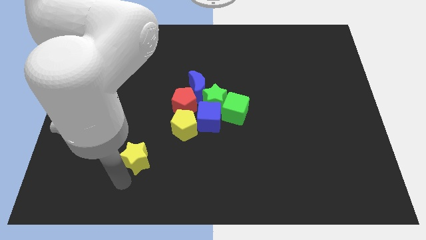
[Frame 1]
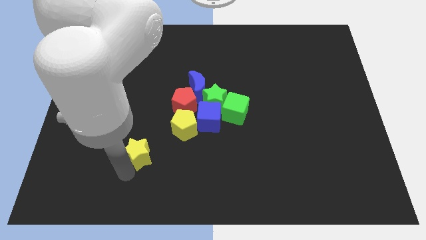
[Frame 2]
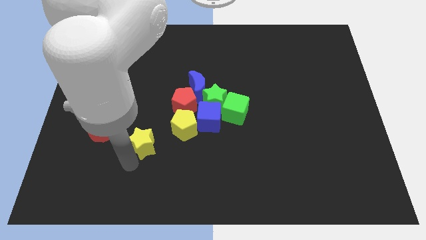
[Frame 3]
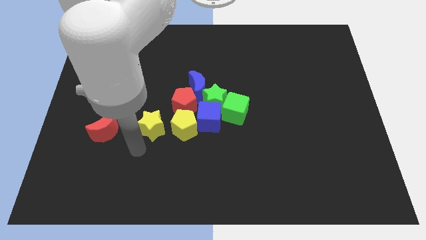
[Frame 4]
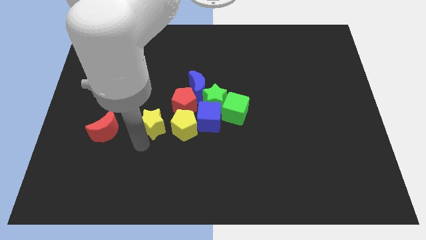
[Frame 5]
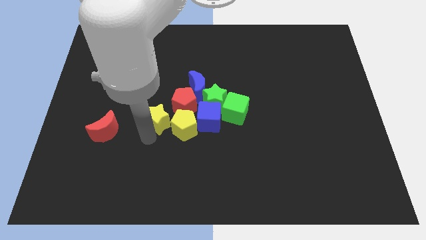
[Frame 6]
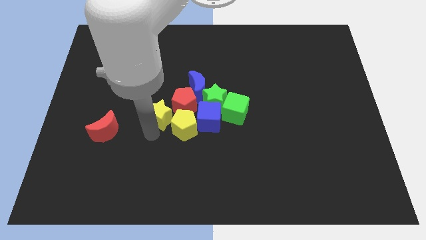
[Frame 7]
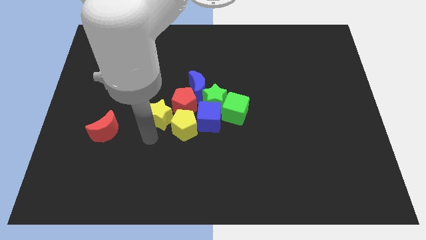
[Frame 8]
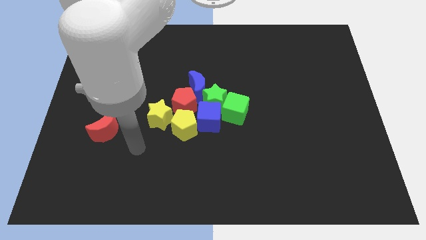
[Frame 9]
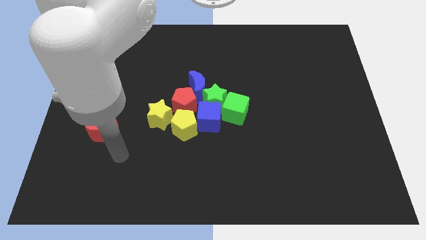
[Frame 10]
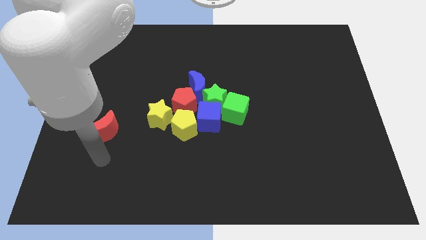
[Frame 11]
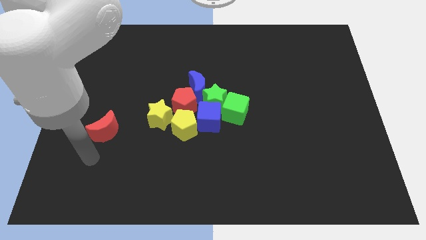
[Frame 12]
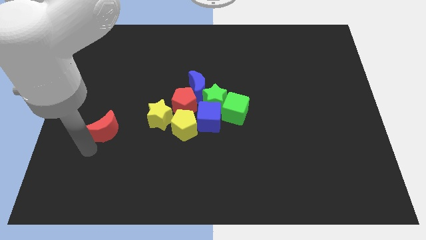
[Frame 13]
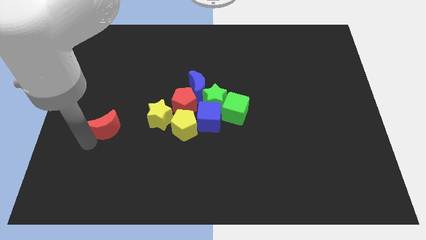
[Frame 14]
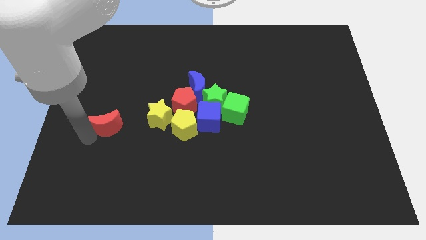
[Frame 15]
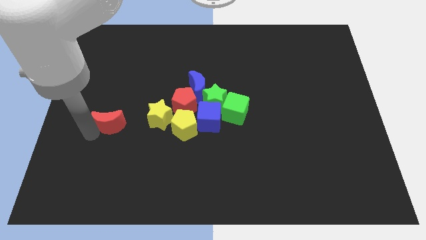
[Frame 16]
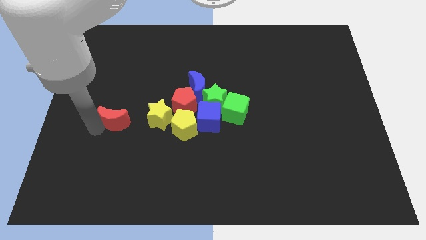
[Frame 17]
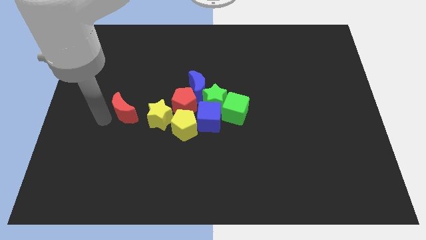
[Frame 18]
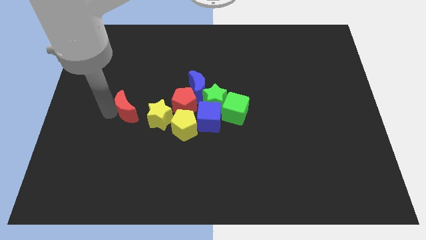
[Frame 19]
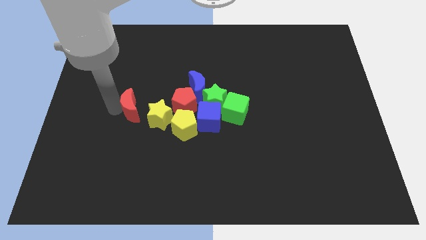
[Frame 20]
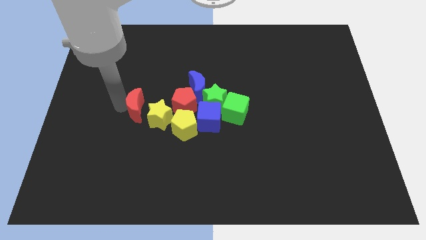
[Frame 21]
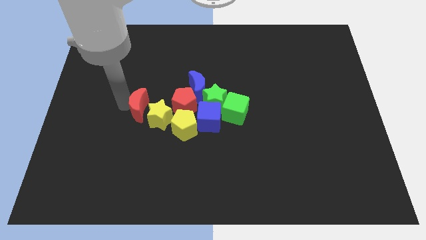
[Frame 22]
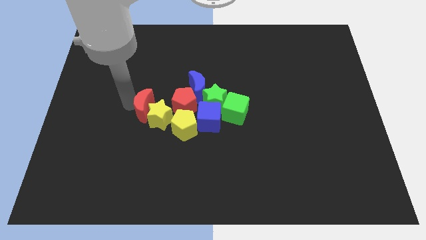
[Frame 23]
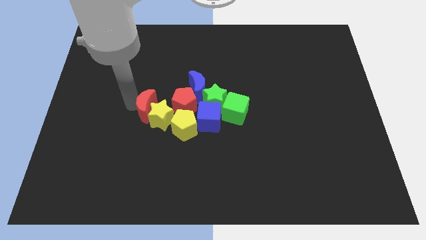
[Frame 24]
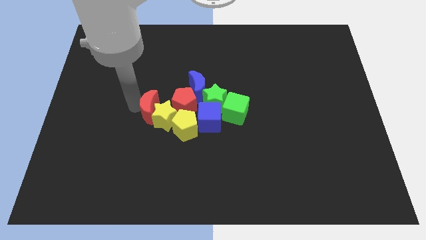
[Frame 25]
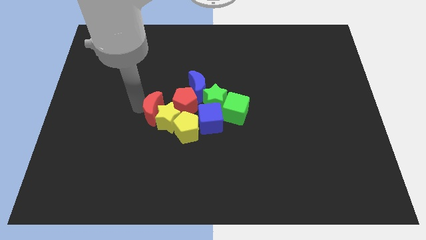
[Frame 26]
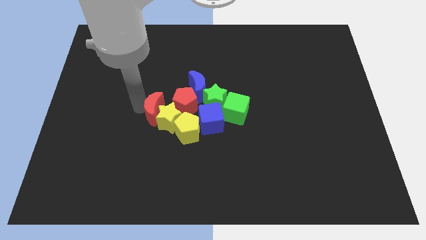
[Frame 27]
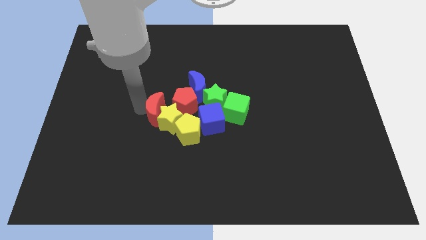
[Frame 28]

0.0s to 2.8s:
place the red moon diagonally top left to the yellow star

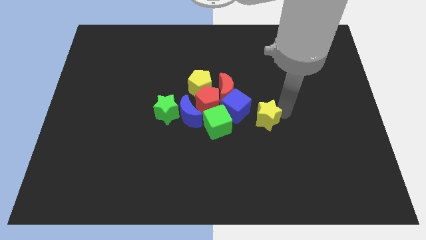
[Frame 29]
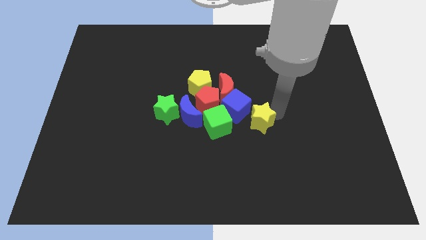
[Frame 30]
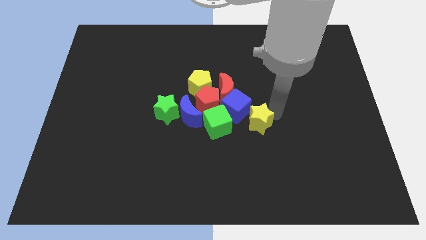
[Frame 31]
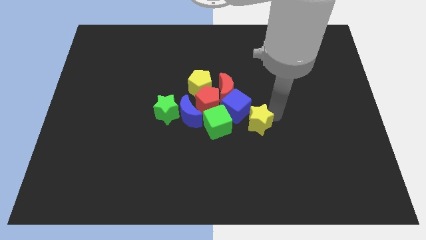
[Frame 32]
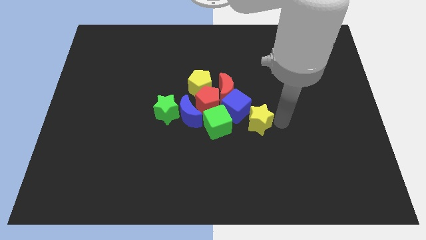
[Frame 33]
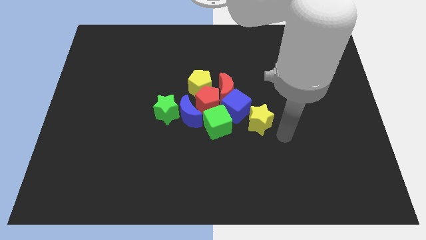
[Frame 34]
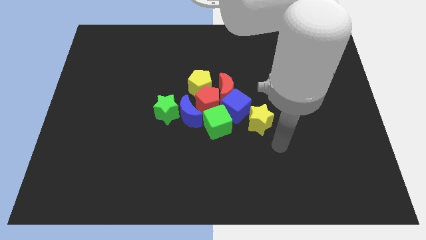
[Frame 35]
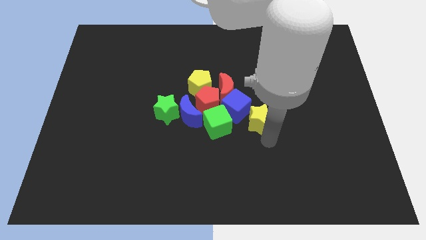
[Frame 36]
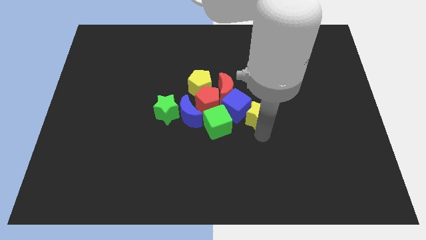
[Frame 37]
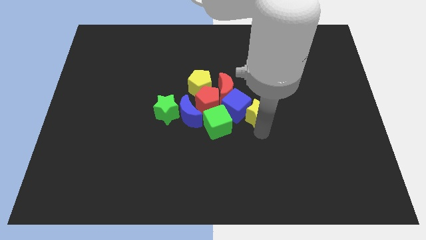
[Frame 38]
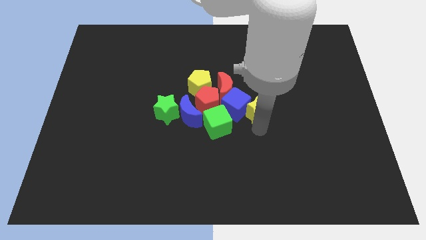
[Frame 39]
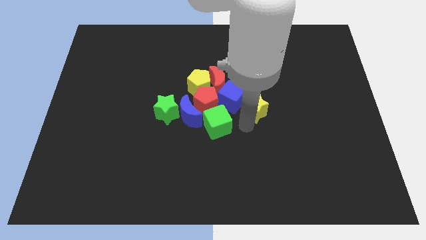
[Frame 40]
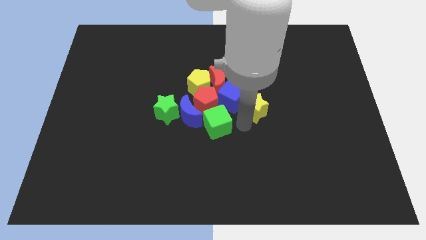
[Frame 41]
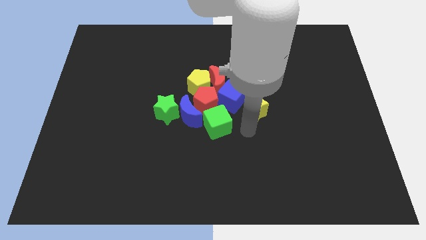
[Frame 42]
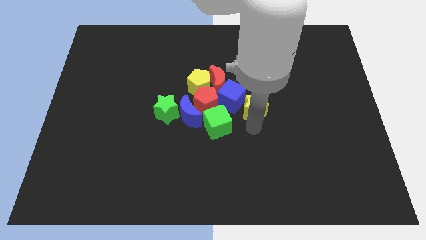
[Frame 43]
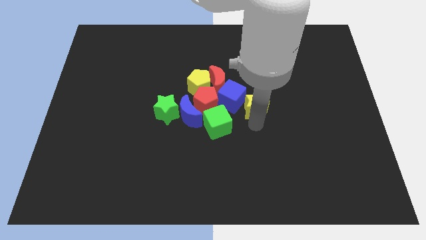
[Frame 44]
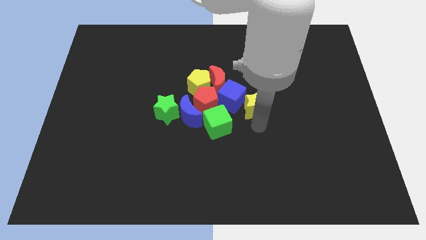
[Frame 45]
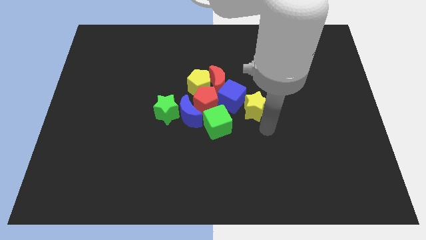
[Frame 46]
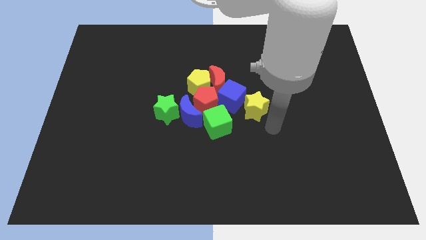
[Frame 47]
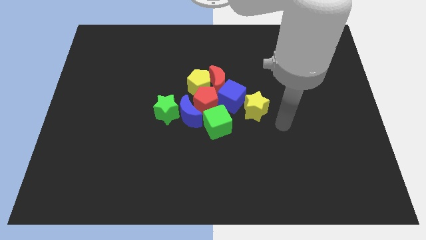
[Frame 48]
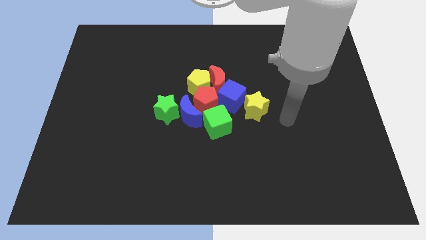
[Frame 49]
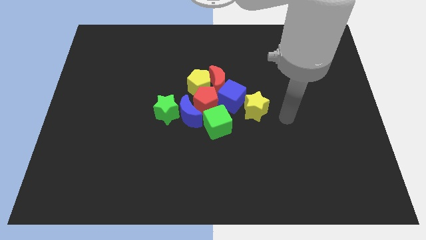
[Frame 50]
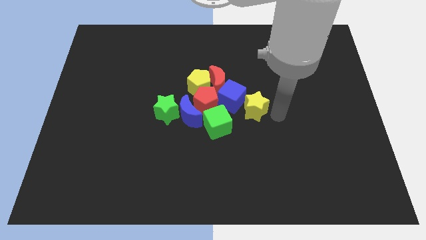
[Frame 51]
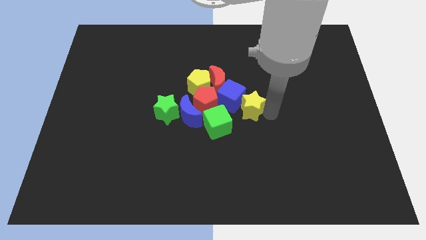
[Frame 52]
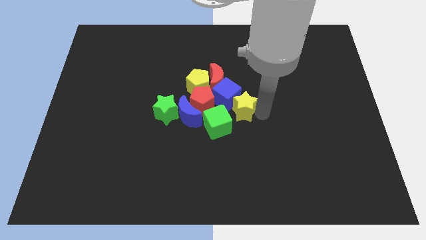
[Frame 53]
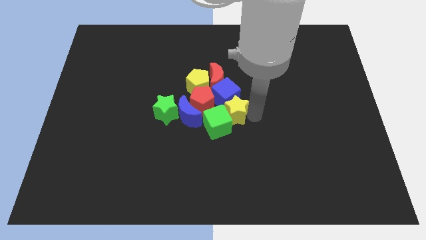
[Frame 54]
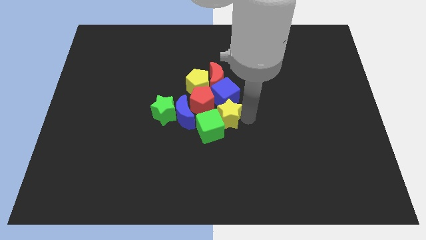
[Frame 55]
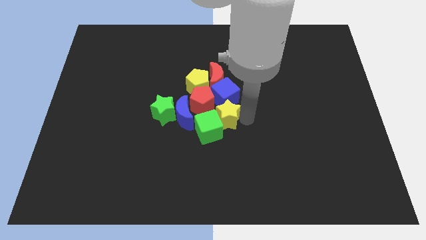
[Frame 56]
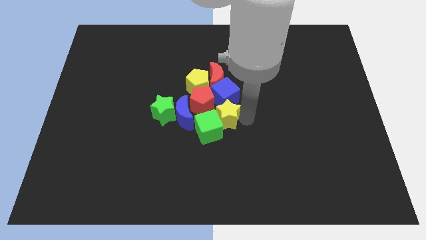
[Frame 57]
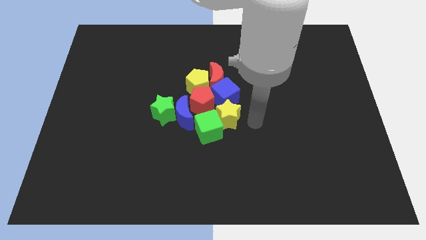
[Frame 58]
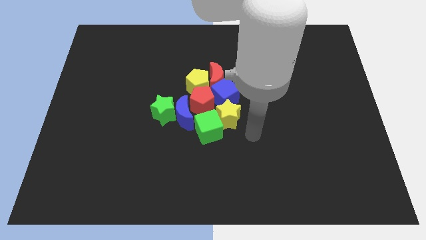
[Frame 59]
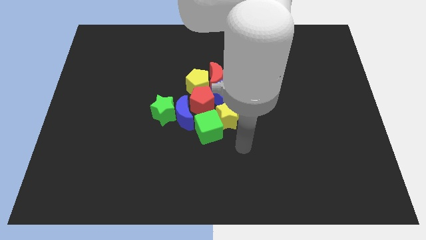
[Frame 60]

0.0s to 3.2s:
push yellow star into group of blocks

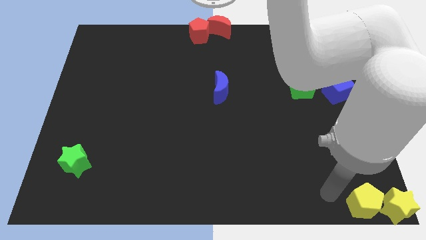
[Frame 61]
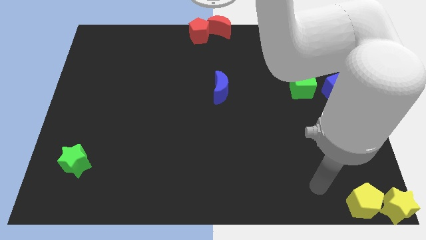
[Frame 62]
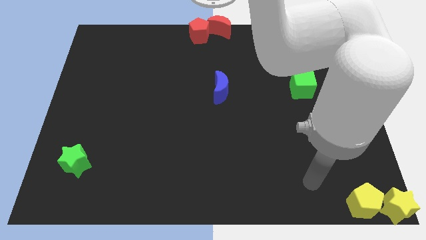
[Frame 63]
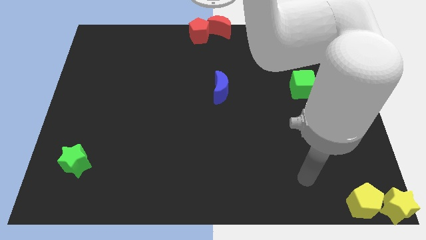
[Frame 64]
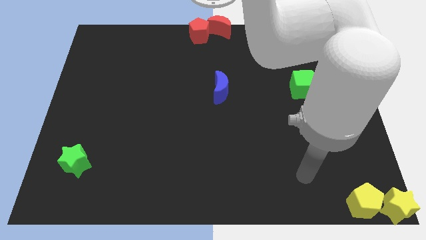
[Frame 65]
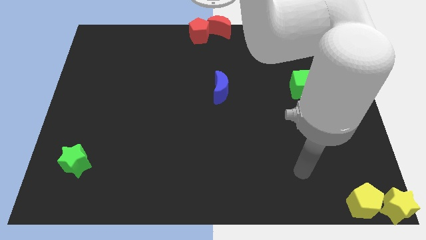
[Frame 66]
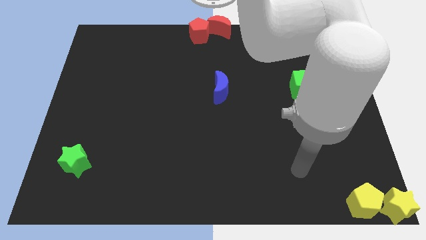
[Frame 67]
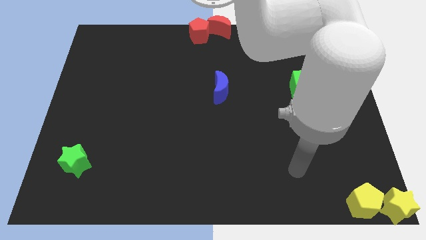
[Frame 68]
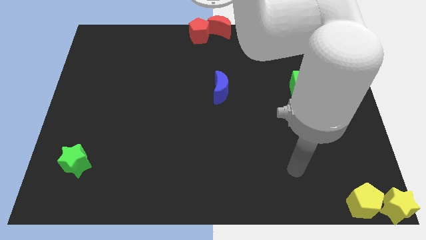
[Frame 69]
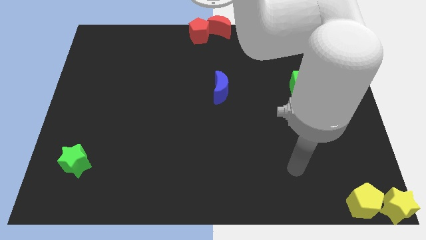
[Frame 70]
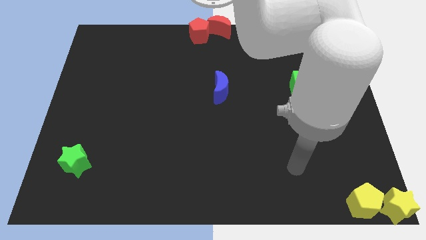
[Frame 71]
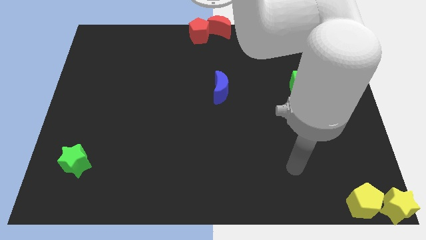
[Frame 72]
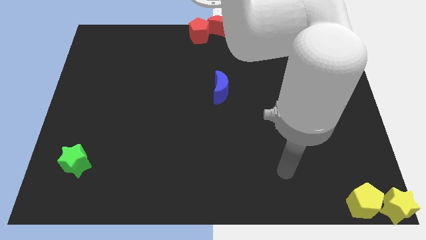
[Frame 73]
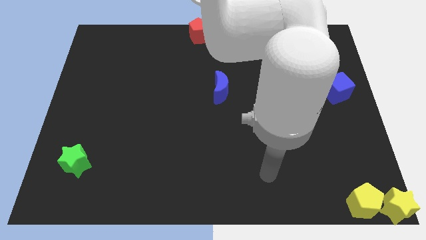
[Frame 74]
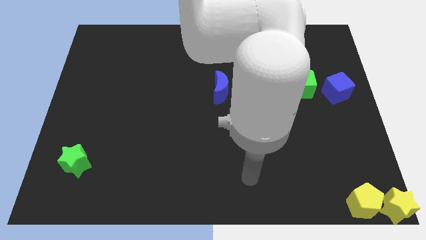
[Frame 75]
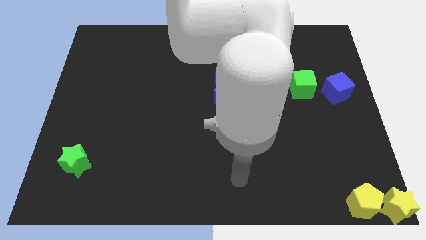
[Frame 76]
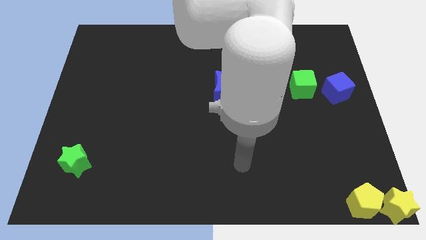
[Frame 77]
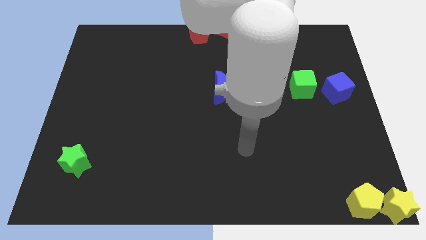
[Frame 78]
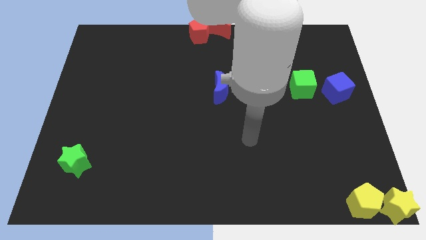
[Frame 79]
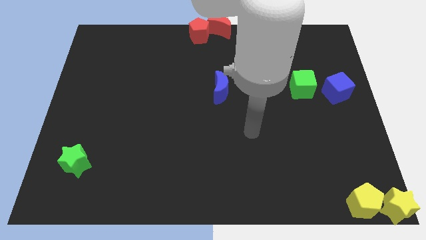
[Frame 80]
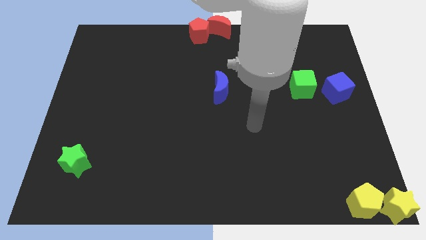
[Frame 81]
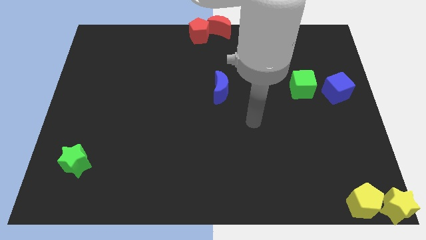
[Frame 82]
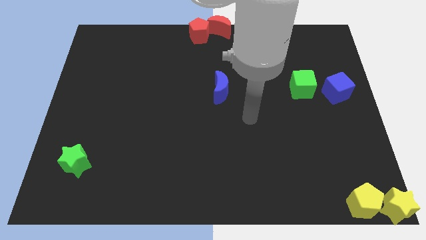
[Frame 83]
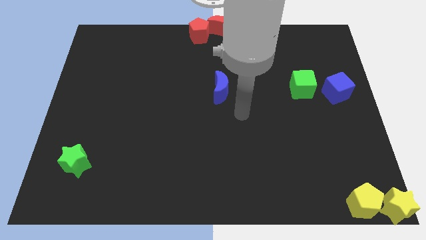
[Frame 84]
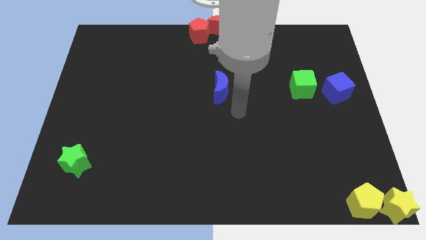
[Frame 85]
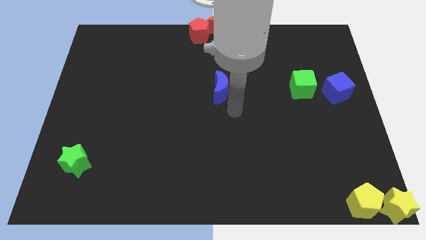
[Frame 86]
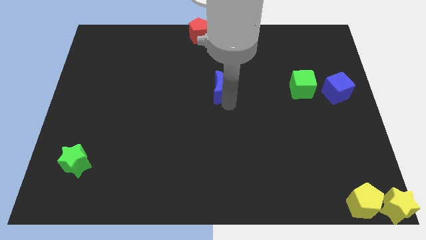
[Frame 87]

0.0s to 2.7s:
move the arm diagonally to the blue moon

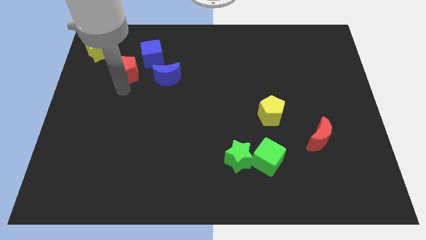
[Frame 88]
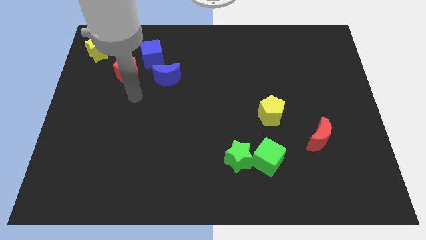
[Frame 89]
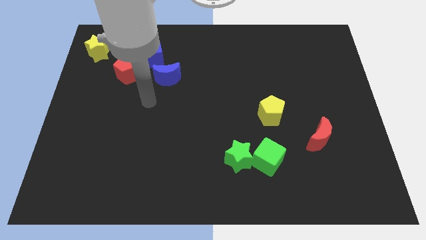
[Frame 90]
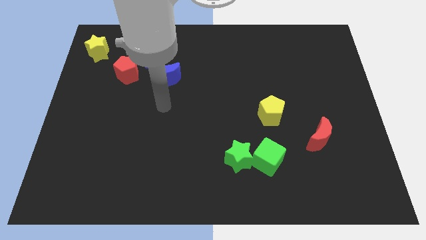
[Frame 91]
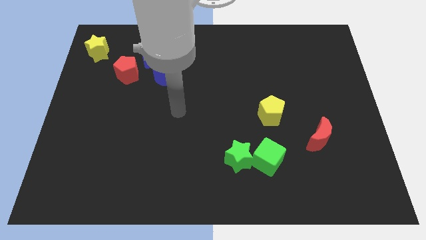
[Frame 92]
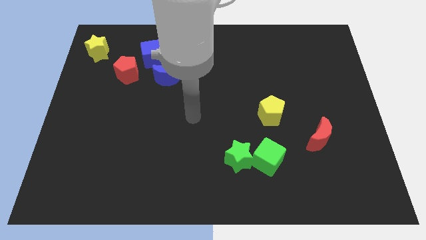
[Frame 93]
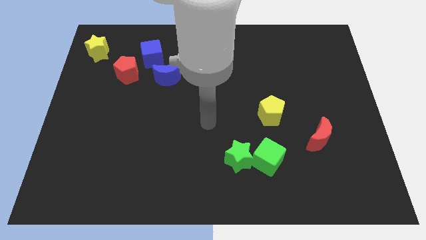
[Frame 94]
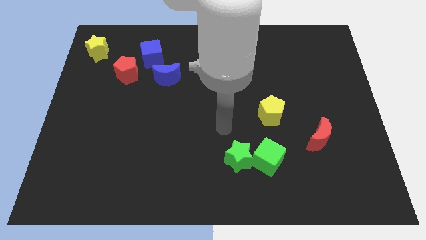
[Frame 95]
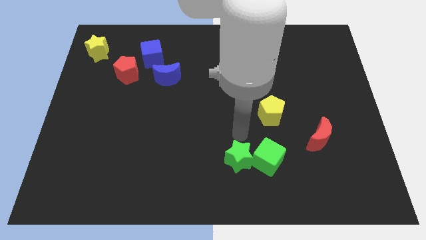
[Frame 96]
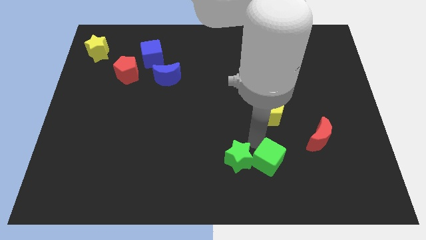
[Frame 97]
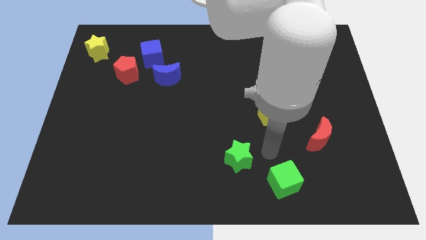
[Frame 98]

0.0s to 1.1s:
move your arm to the left of green cube
